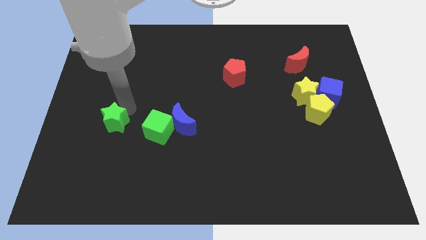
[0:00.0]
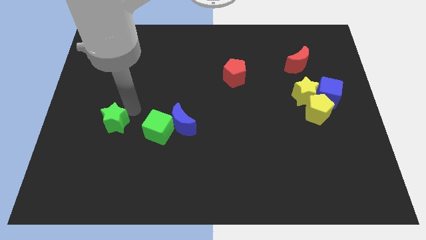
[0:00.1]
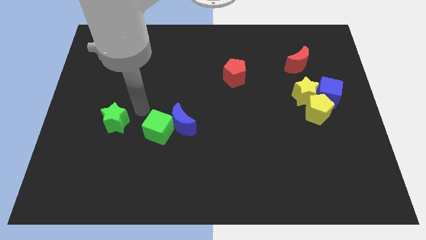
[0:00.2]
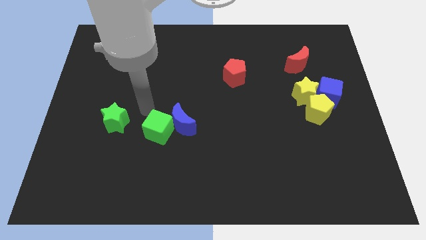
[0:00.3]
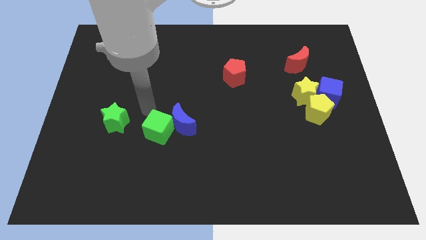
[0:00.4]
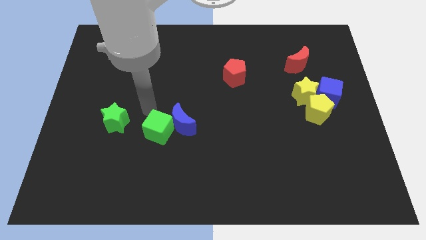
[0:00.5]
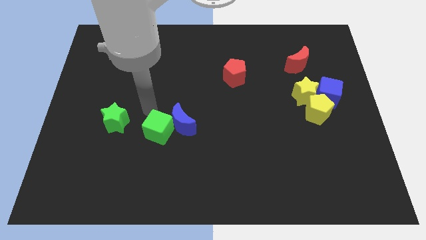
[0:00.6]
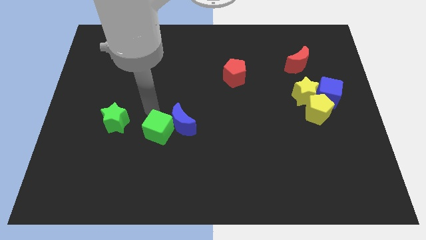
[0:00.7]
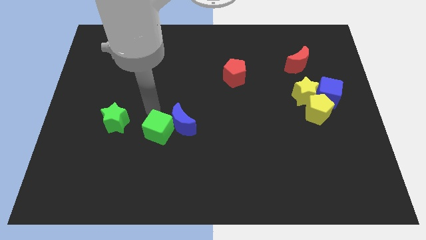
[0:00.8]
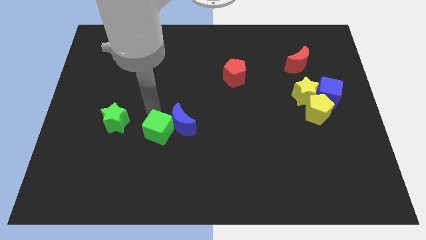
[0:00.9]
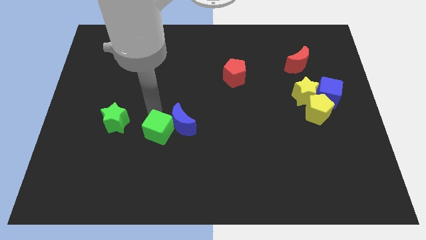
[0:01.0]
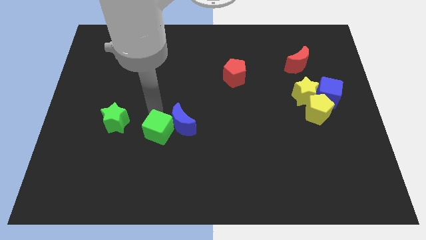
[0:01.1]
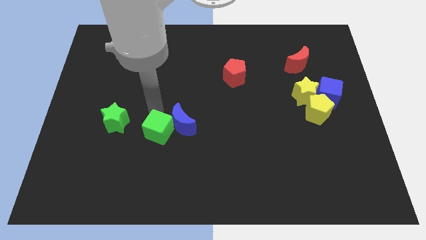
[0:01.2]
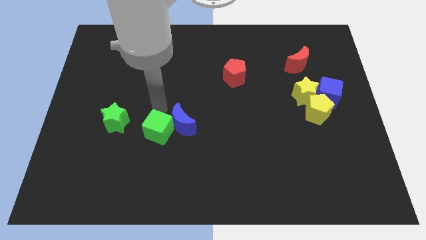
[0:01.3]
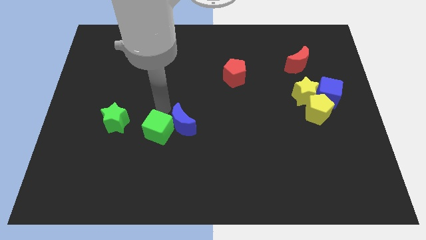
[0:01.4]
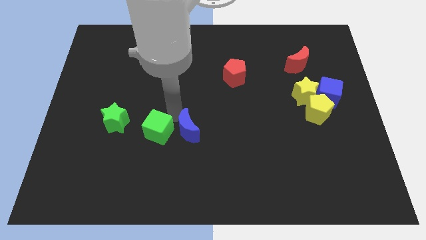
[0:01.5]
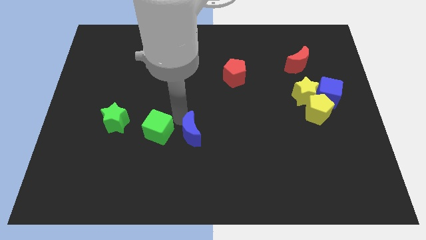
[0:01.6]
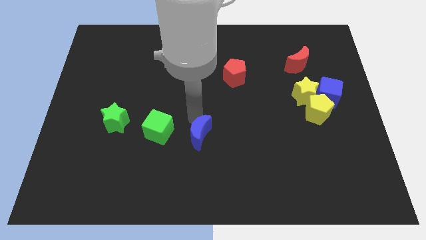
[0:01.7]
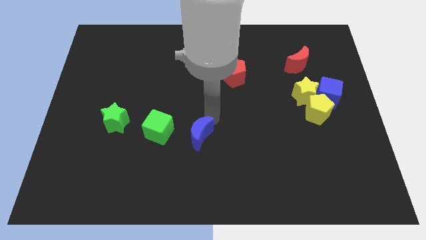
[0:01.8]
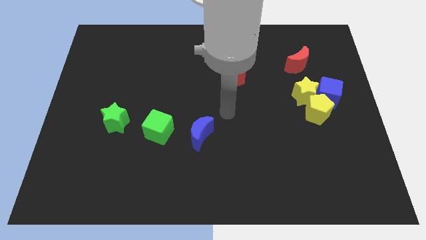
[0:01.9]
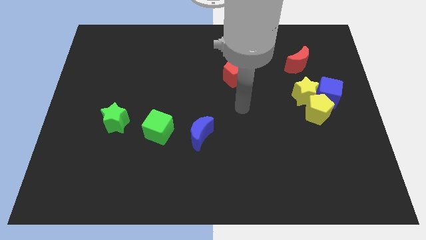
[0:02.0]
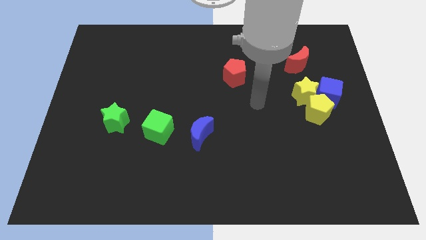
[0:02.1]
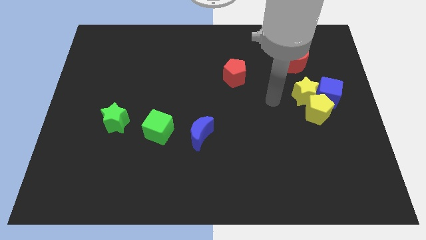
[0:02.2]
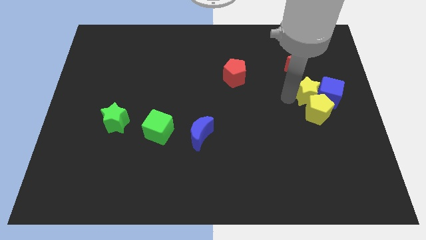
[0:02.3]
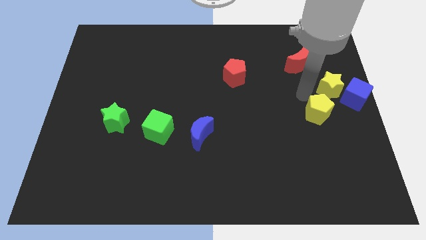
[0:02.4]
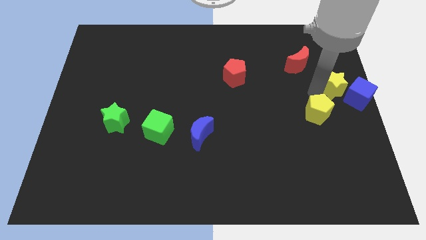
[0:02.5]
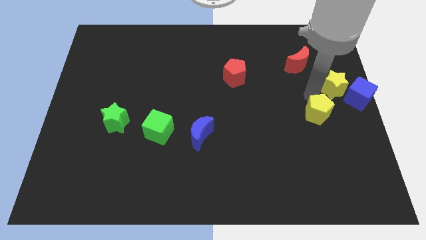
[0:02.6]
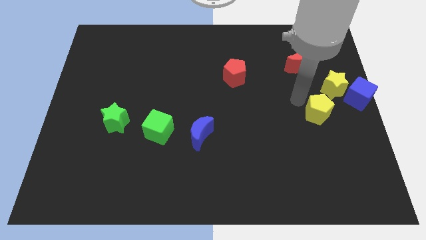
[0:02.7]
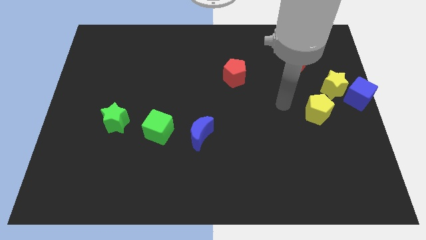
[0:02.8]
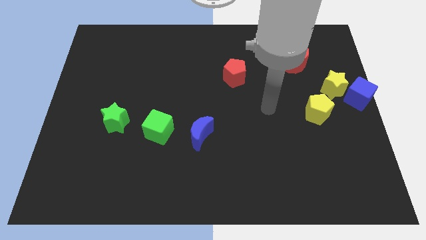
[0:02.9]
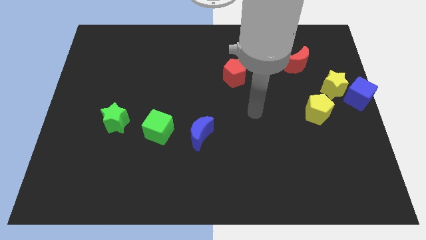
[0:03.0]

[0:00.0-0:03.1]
move blue crescent and yellow star slightly to the right

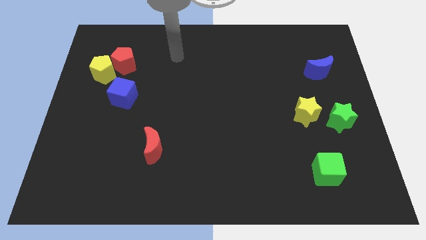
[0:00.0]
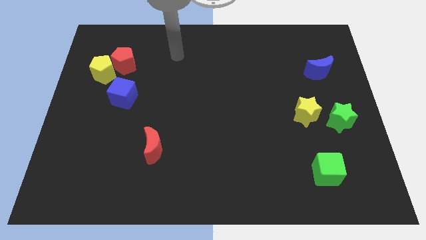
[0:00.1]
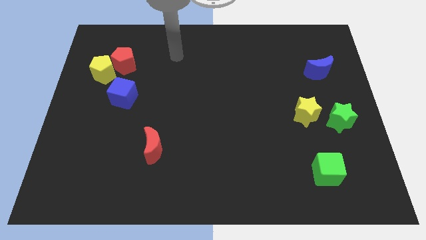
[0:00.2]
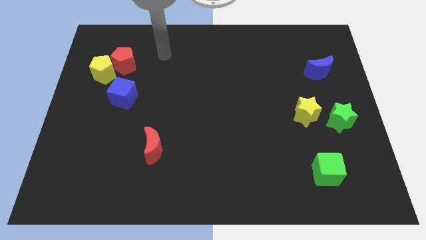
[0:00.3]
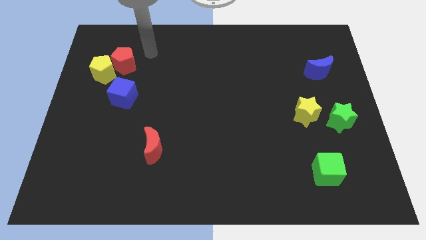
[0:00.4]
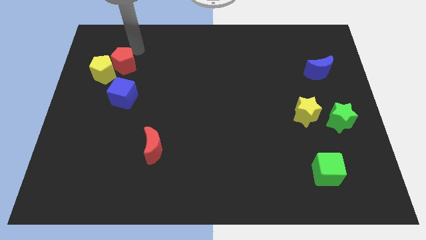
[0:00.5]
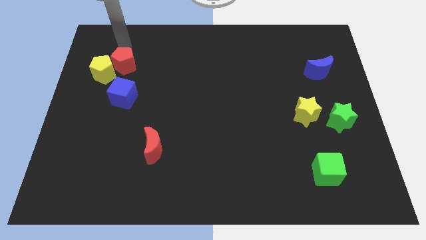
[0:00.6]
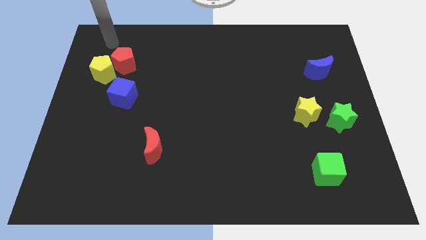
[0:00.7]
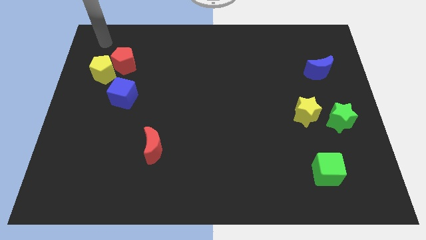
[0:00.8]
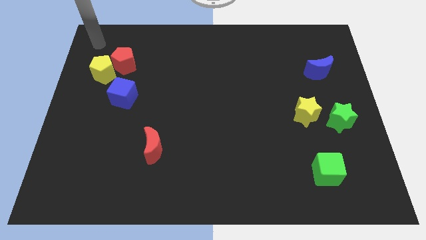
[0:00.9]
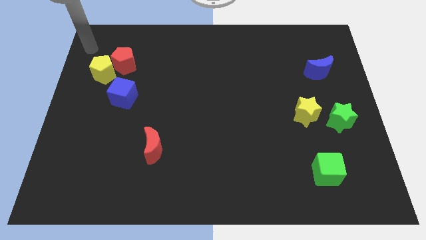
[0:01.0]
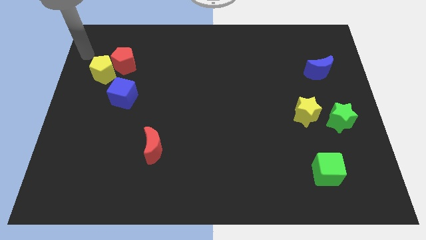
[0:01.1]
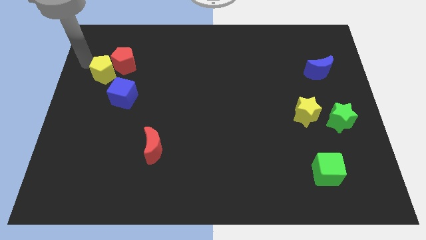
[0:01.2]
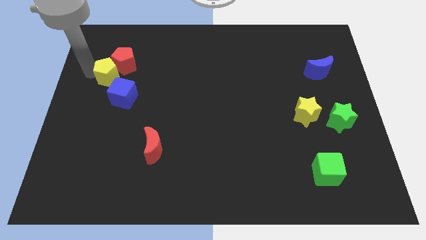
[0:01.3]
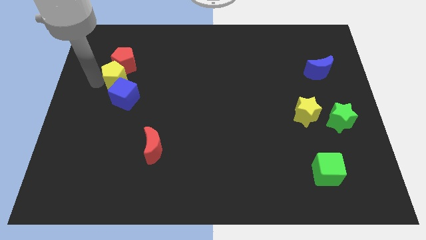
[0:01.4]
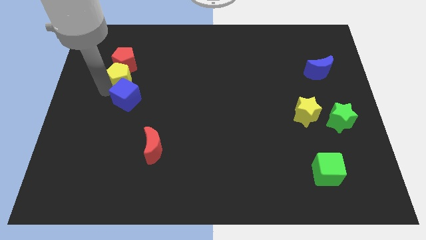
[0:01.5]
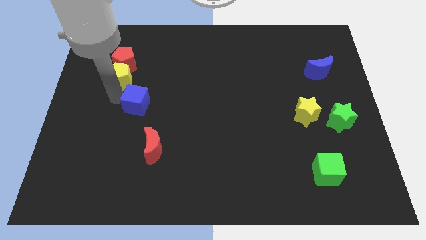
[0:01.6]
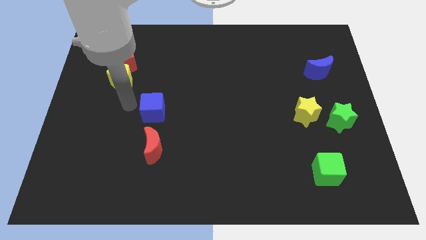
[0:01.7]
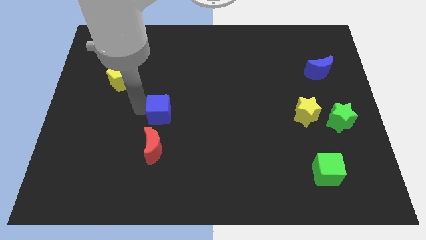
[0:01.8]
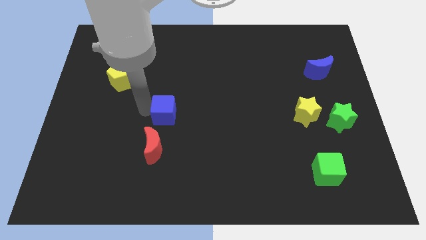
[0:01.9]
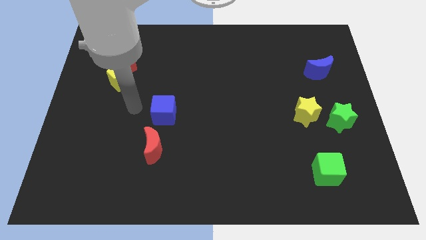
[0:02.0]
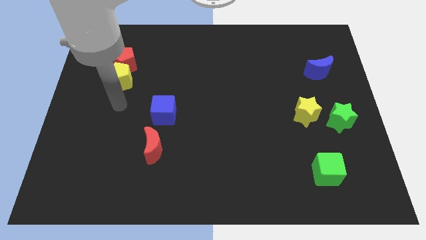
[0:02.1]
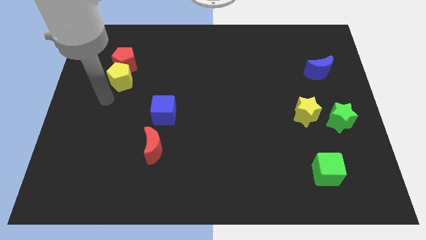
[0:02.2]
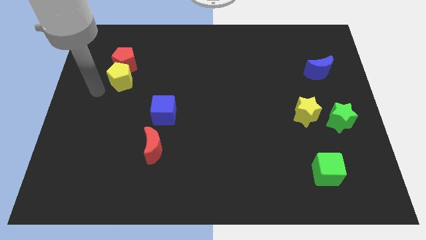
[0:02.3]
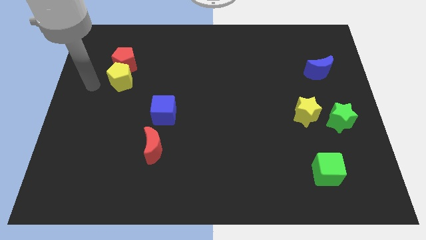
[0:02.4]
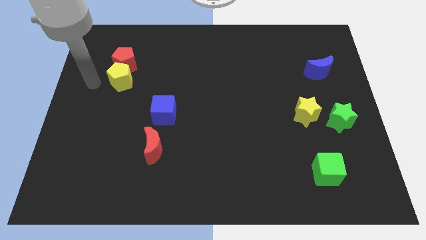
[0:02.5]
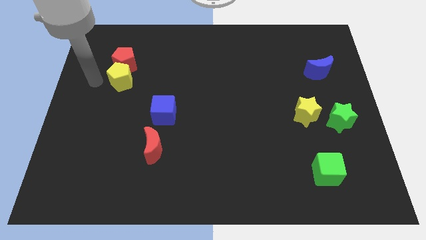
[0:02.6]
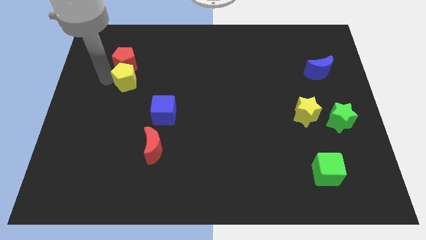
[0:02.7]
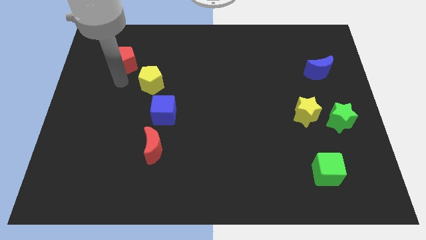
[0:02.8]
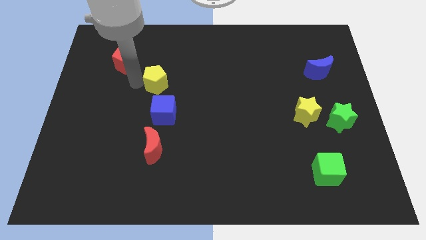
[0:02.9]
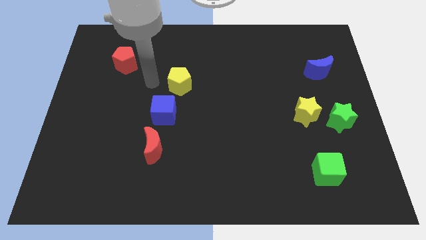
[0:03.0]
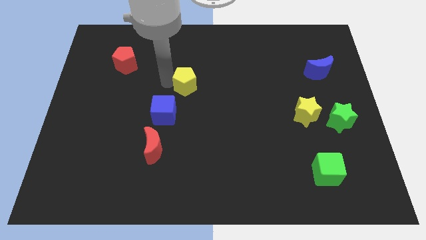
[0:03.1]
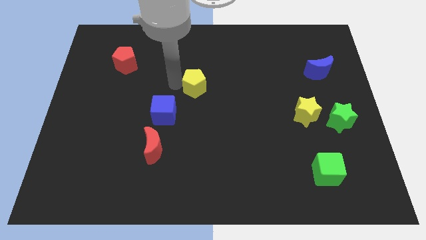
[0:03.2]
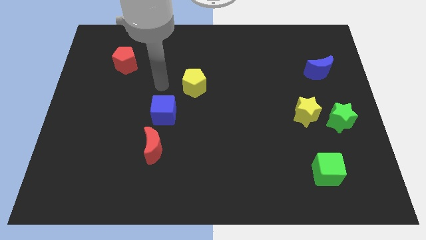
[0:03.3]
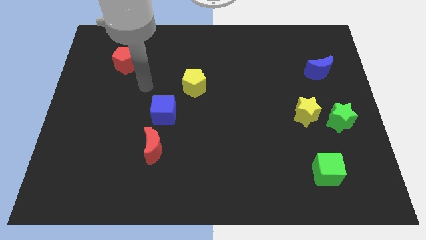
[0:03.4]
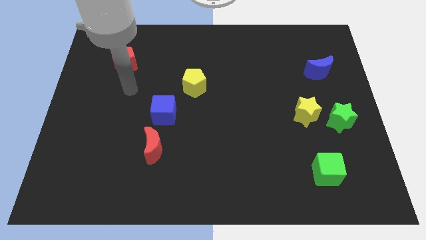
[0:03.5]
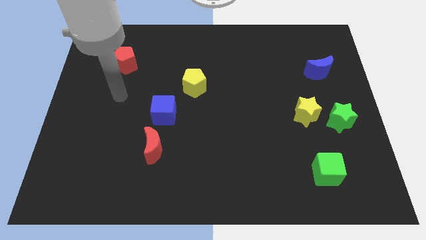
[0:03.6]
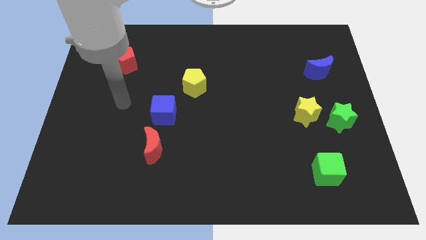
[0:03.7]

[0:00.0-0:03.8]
move the blue cube and the yellow pentagon to the right of the board

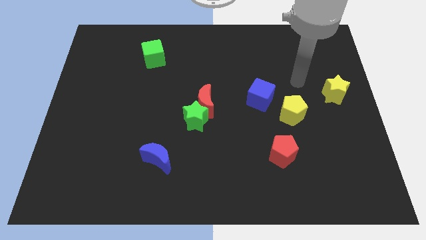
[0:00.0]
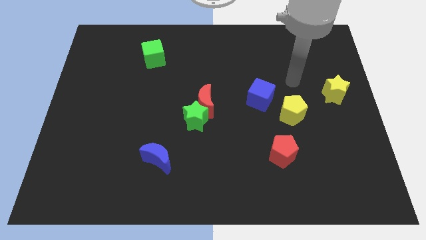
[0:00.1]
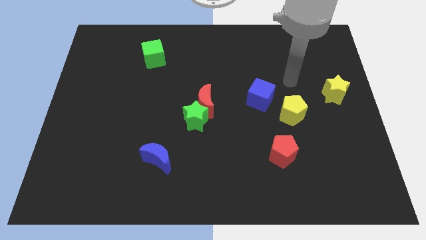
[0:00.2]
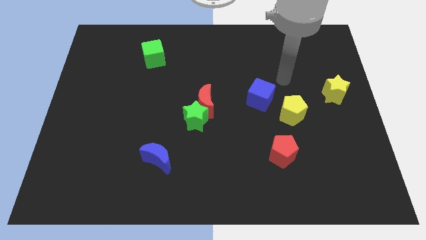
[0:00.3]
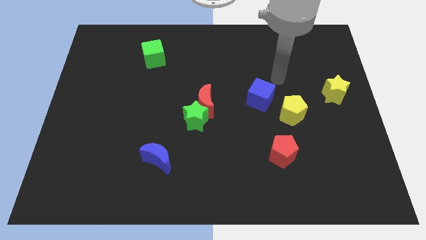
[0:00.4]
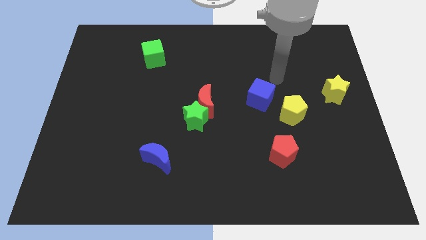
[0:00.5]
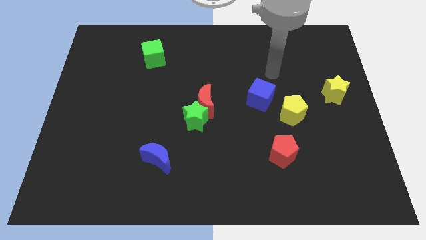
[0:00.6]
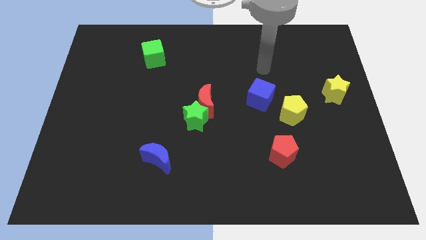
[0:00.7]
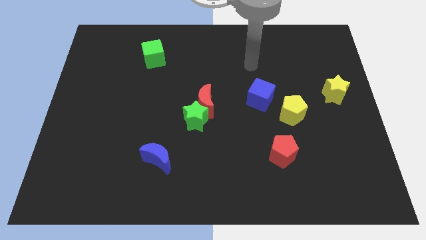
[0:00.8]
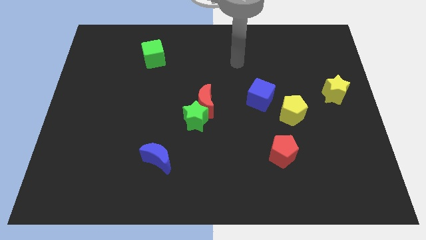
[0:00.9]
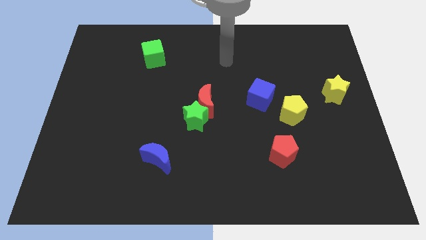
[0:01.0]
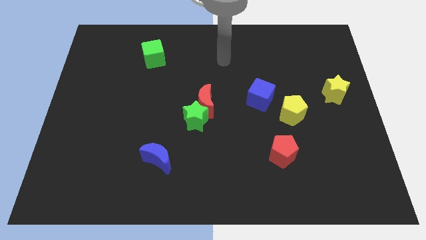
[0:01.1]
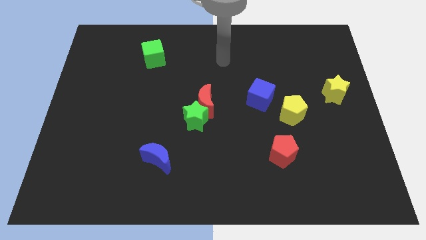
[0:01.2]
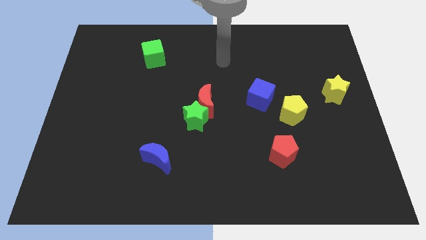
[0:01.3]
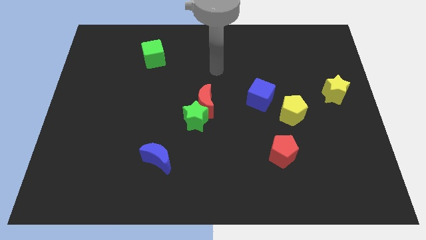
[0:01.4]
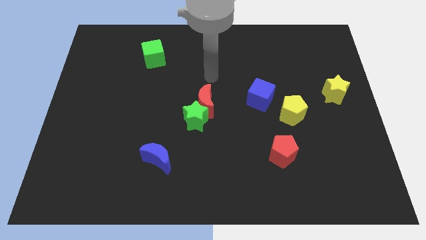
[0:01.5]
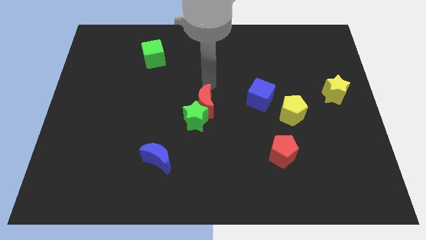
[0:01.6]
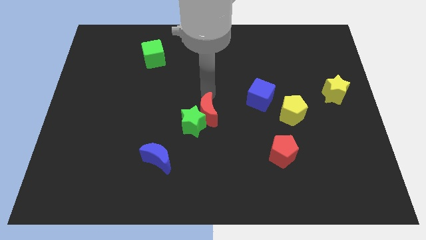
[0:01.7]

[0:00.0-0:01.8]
move your arm to the top side of the red moon

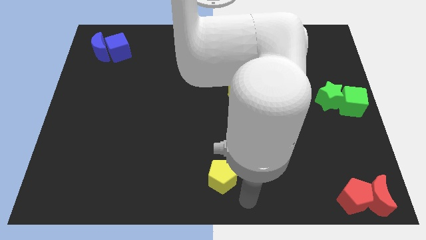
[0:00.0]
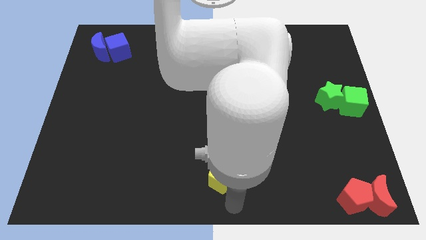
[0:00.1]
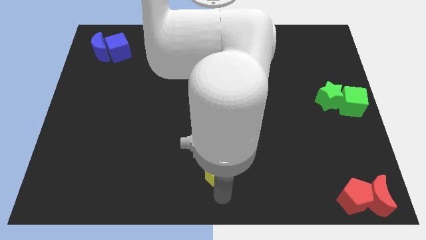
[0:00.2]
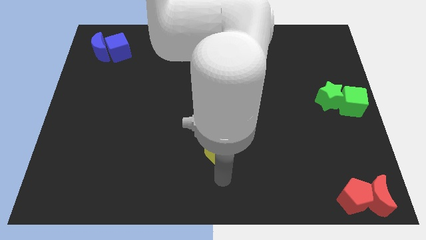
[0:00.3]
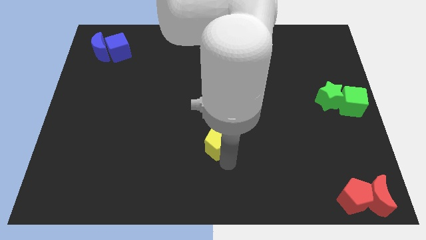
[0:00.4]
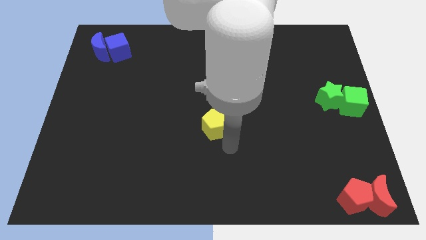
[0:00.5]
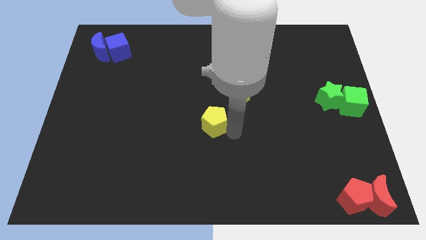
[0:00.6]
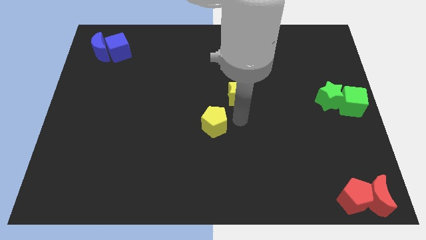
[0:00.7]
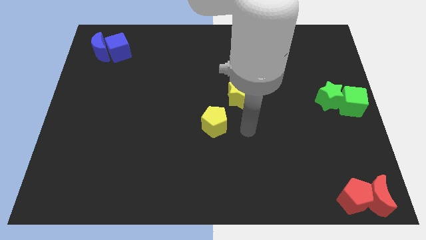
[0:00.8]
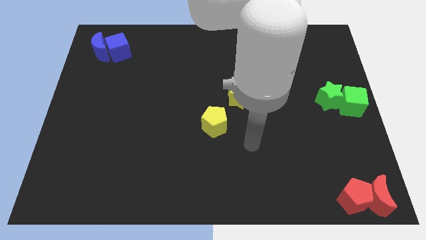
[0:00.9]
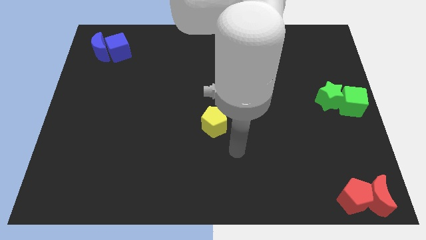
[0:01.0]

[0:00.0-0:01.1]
slide the yellow pentagon slightly towards up
